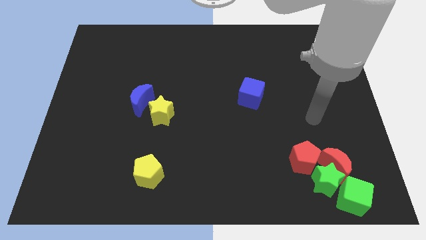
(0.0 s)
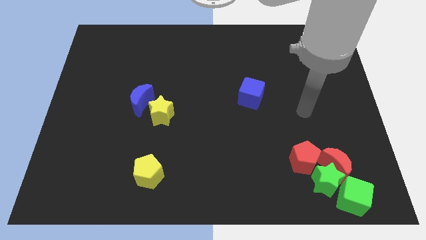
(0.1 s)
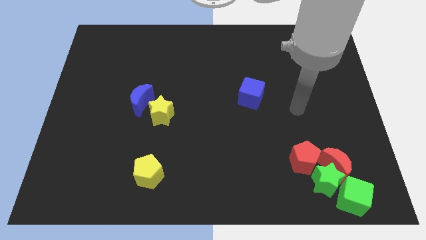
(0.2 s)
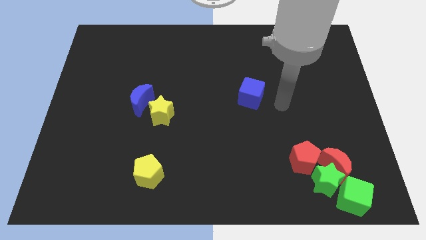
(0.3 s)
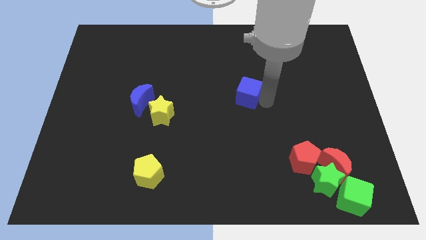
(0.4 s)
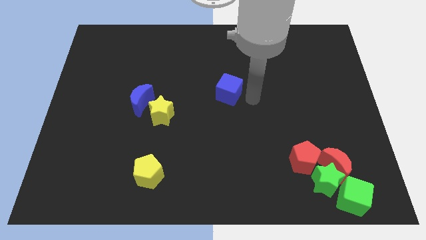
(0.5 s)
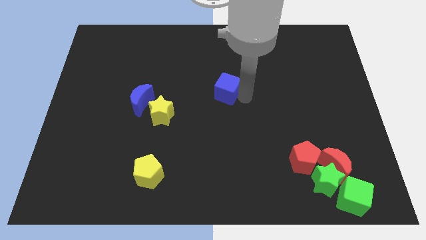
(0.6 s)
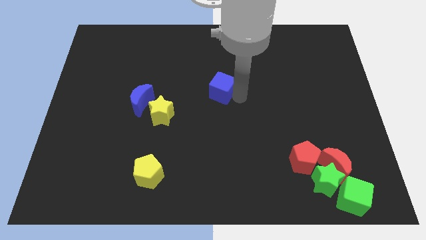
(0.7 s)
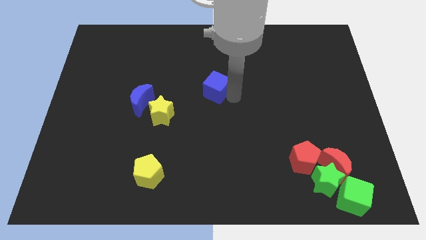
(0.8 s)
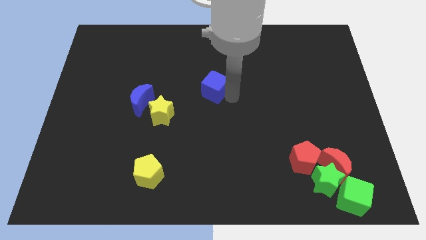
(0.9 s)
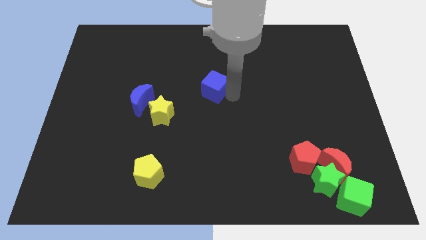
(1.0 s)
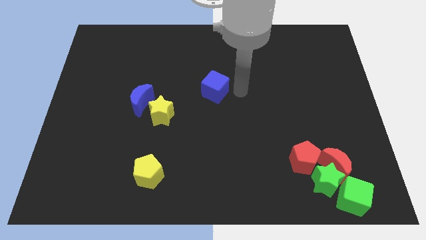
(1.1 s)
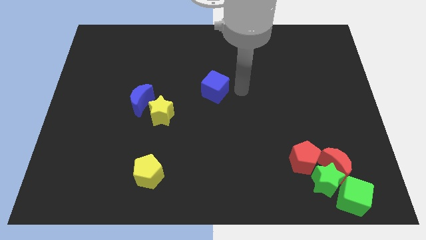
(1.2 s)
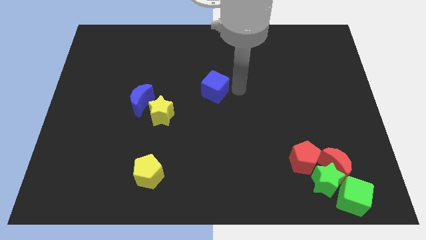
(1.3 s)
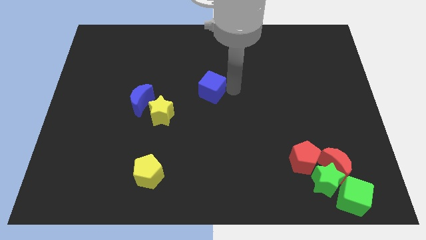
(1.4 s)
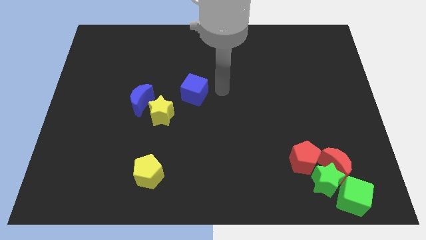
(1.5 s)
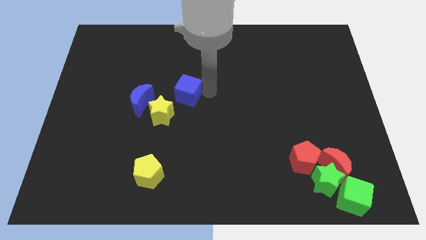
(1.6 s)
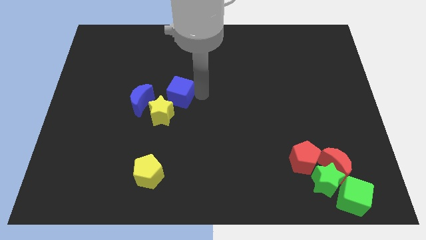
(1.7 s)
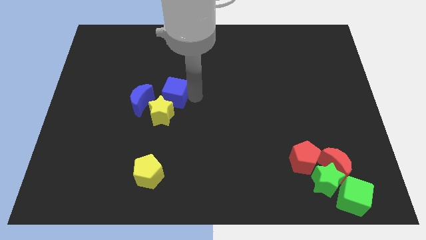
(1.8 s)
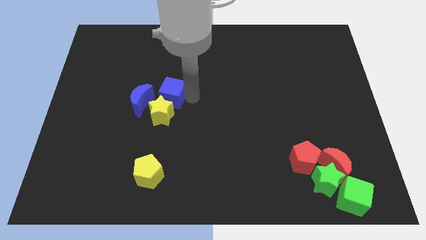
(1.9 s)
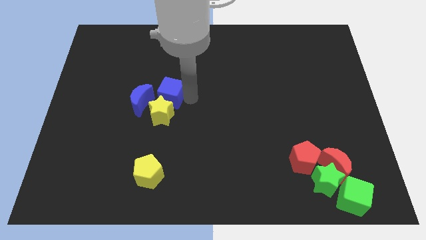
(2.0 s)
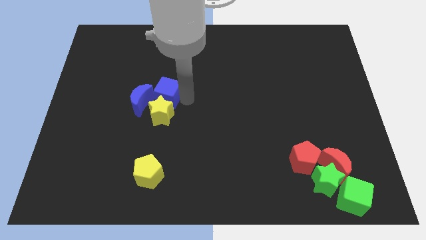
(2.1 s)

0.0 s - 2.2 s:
move the blue cube into the green star and blue moon

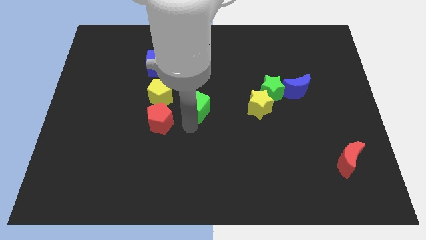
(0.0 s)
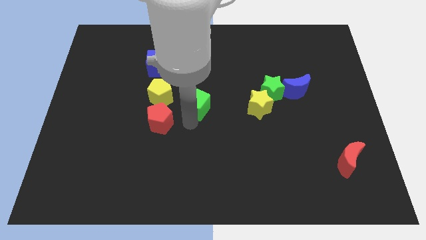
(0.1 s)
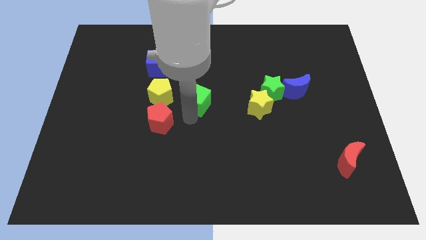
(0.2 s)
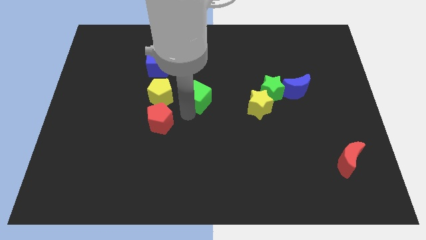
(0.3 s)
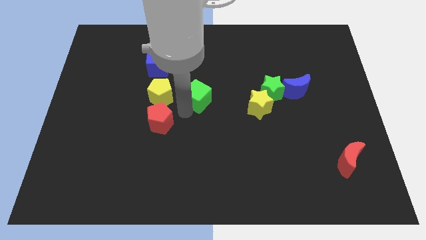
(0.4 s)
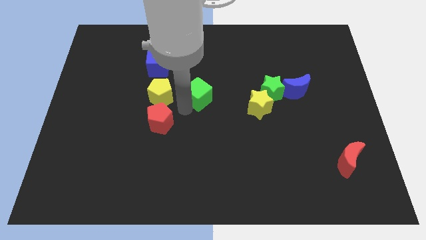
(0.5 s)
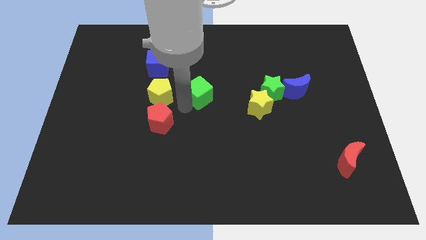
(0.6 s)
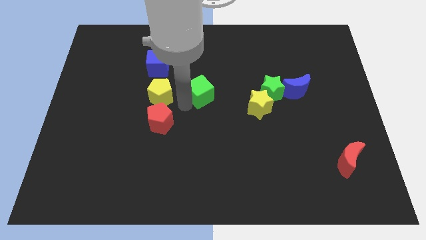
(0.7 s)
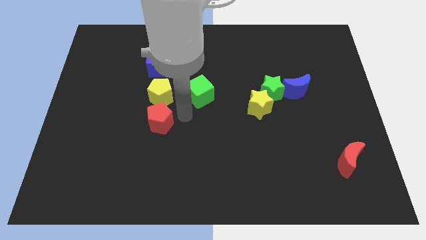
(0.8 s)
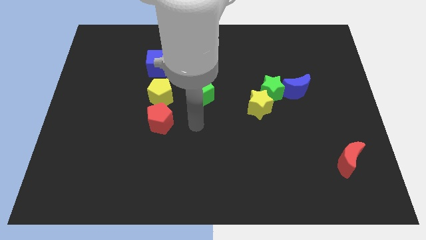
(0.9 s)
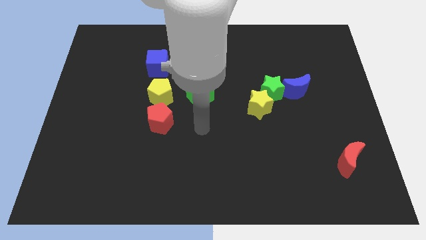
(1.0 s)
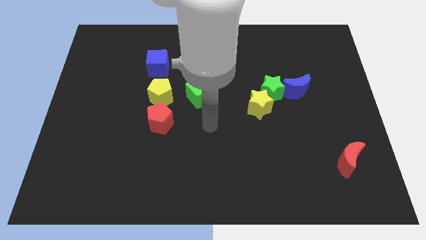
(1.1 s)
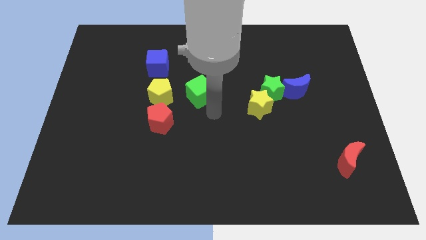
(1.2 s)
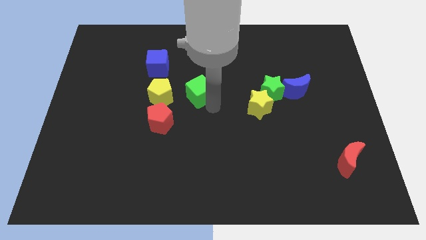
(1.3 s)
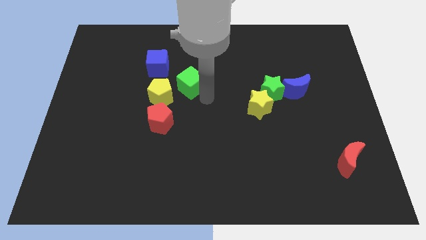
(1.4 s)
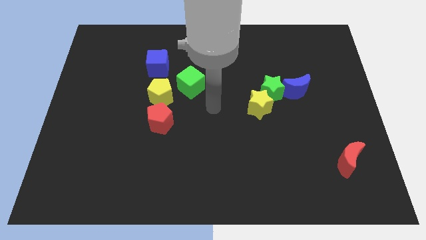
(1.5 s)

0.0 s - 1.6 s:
push the green cube to the right side of the yellow pentagon

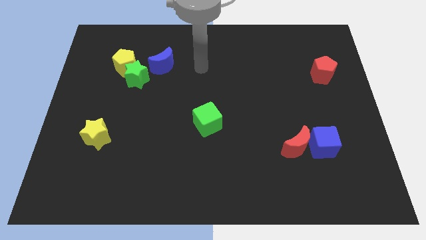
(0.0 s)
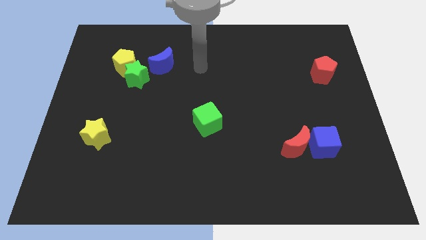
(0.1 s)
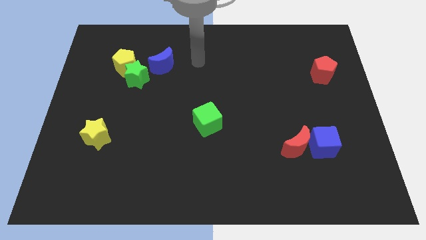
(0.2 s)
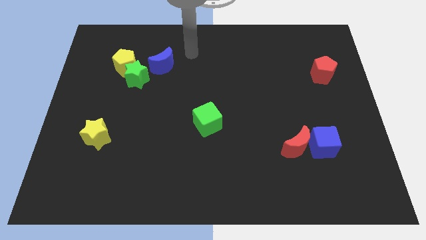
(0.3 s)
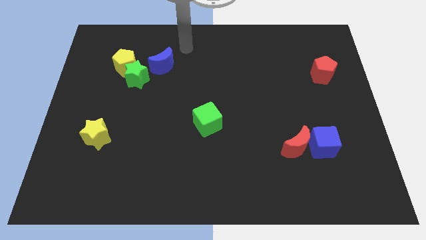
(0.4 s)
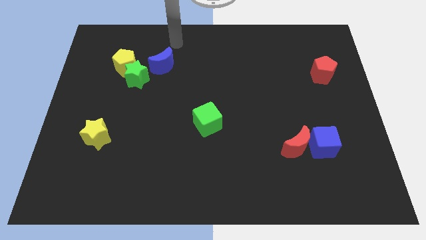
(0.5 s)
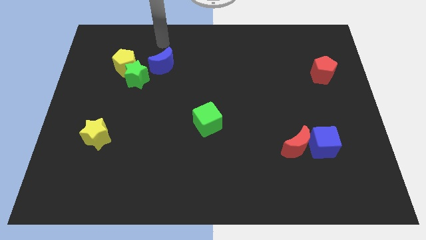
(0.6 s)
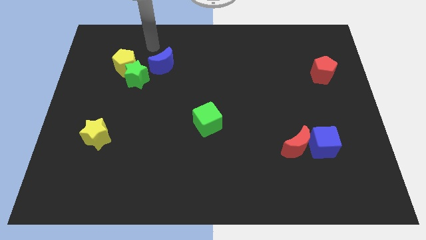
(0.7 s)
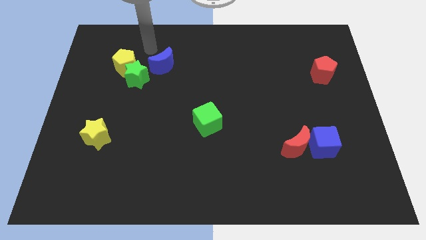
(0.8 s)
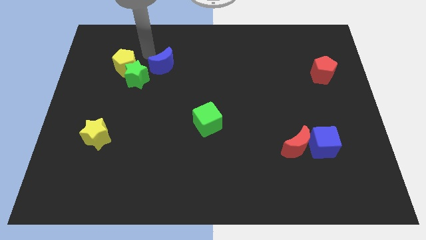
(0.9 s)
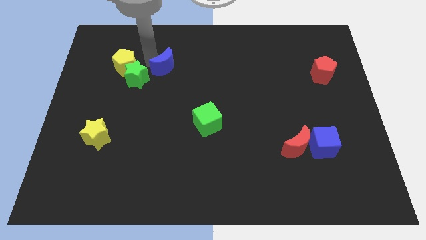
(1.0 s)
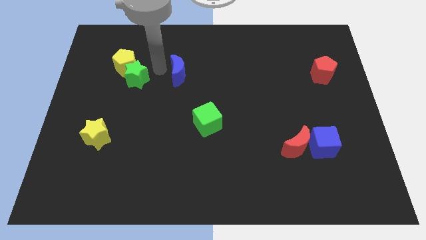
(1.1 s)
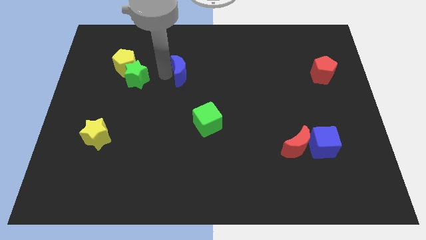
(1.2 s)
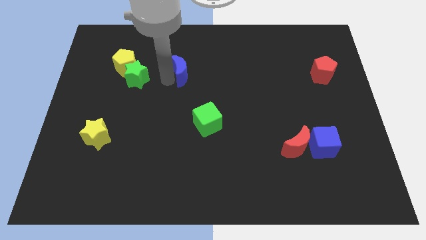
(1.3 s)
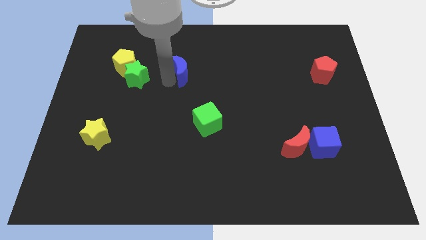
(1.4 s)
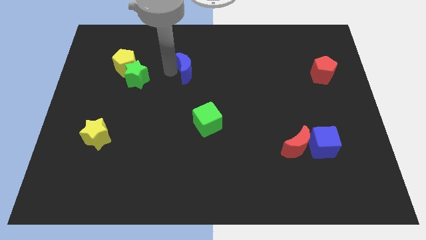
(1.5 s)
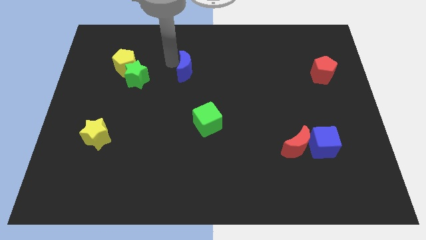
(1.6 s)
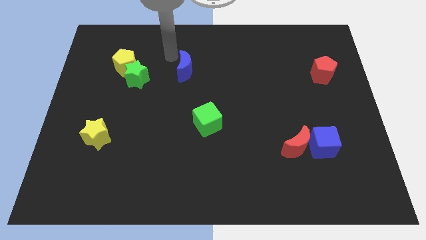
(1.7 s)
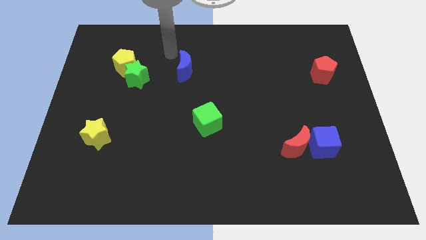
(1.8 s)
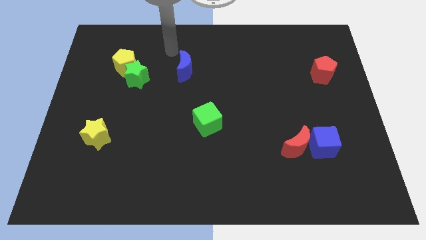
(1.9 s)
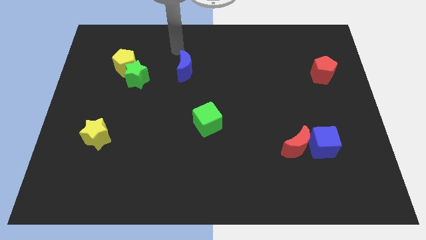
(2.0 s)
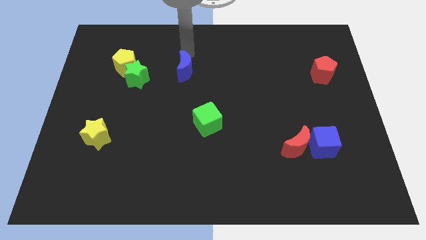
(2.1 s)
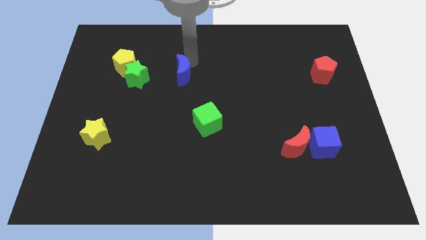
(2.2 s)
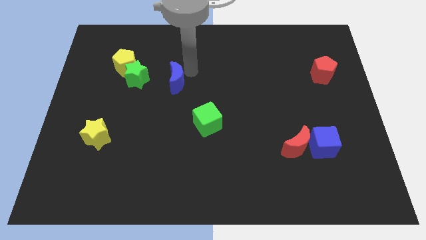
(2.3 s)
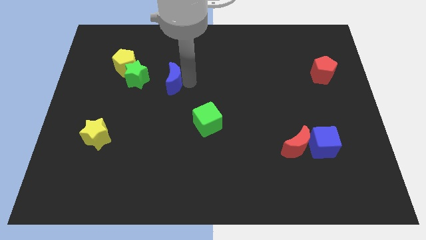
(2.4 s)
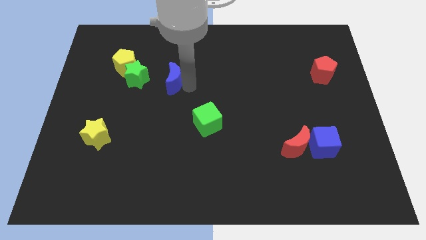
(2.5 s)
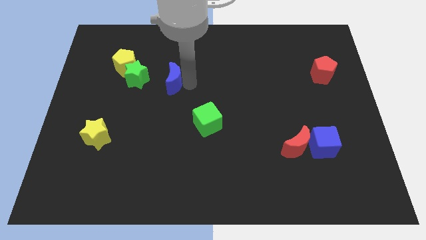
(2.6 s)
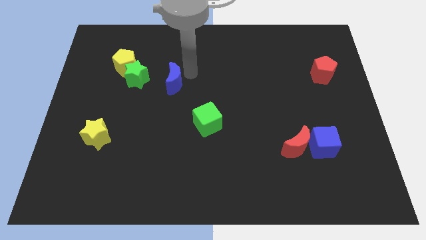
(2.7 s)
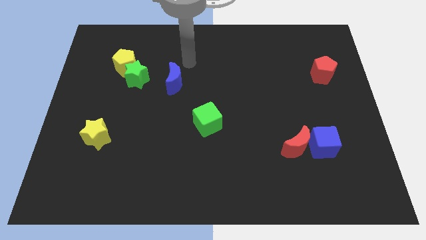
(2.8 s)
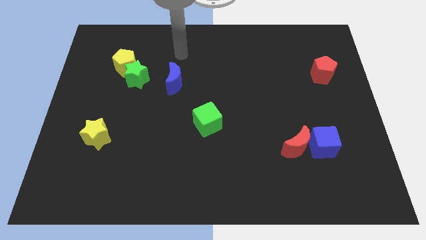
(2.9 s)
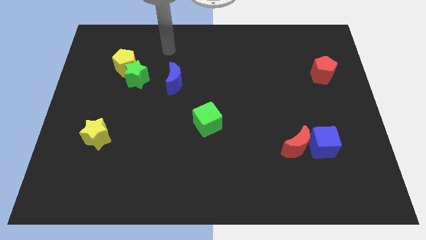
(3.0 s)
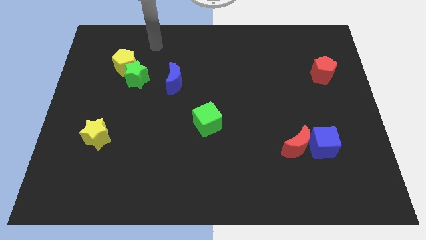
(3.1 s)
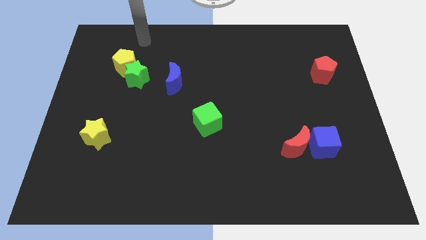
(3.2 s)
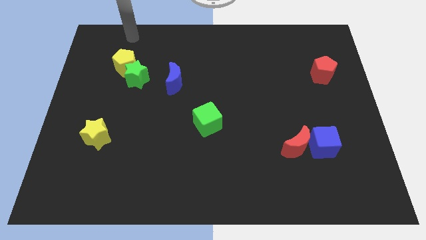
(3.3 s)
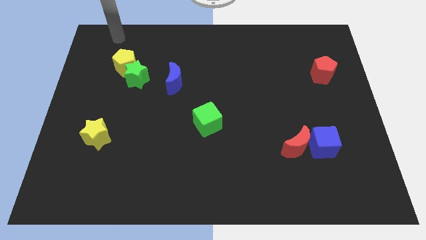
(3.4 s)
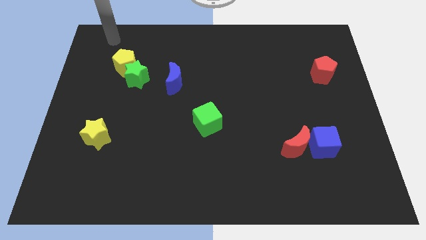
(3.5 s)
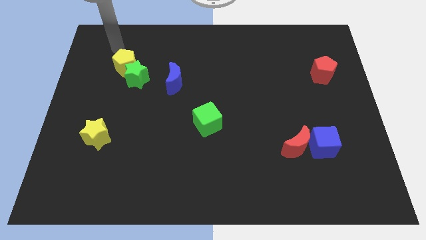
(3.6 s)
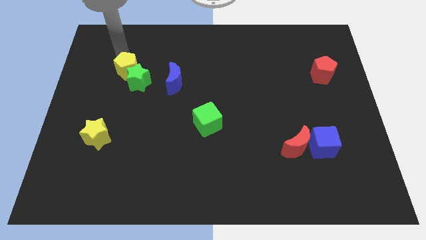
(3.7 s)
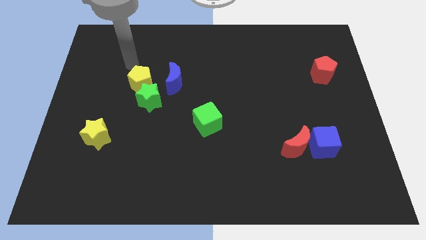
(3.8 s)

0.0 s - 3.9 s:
push the blue moon towards the green cube

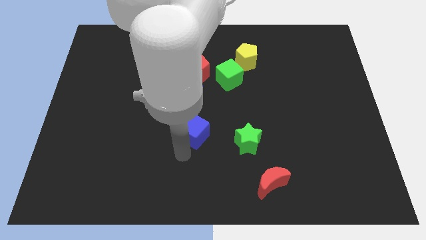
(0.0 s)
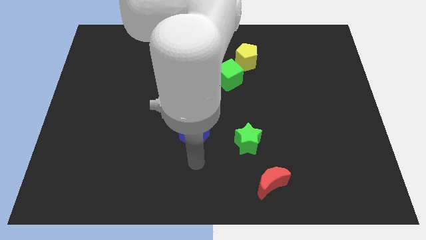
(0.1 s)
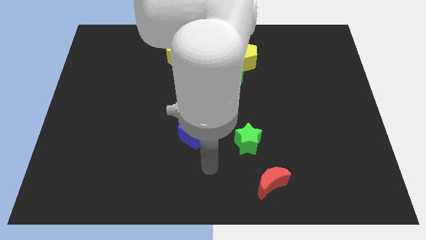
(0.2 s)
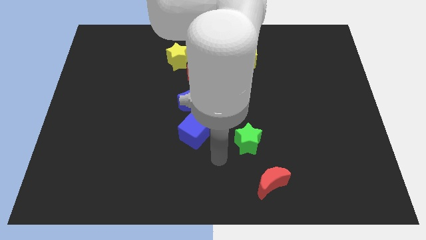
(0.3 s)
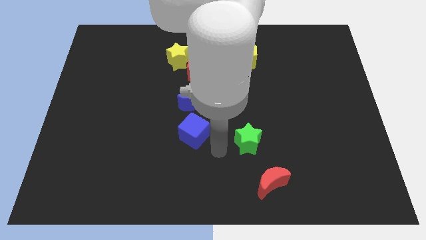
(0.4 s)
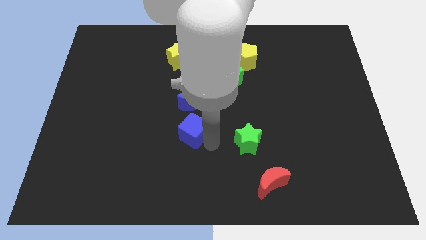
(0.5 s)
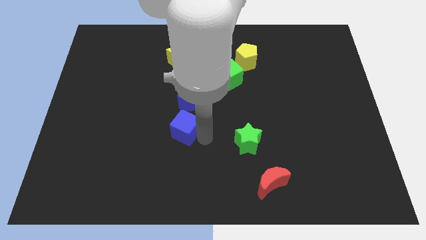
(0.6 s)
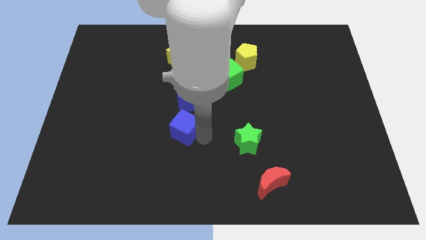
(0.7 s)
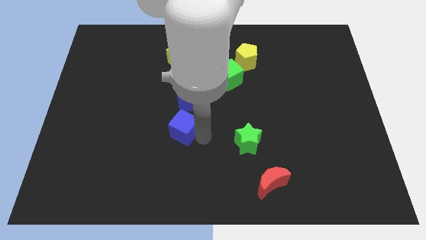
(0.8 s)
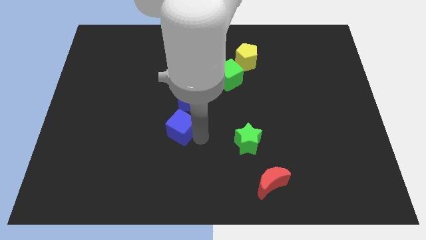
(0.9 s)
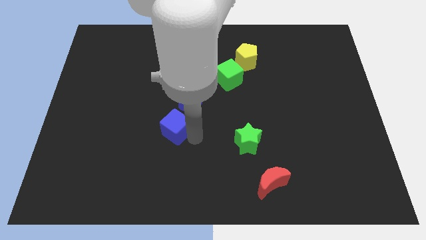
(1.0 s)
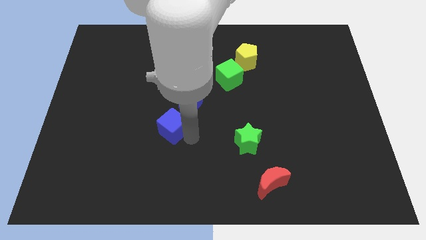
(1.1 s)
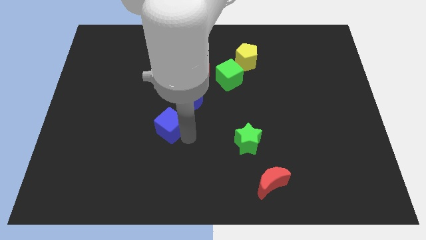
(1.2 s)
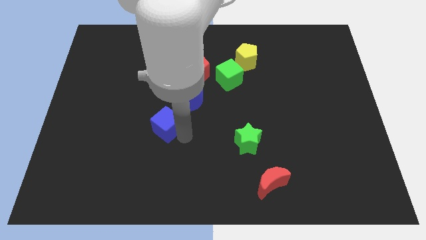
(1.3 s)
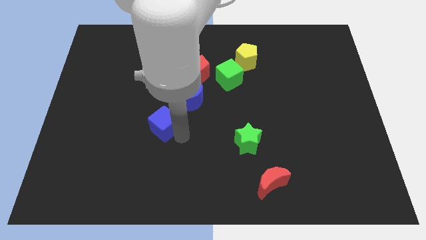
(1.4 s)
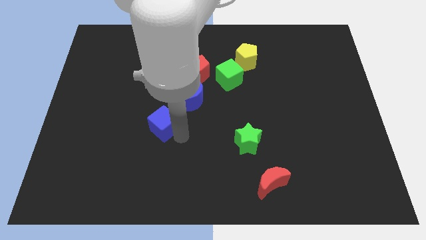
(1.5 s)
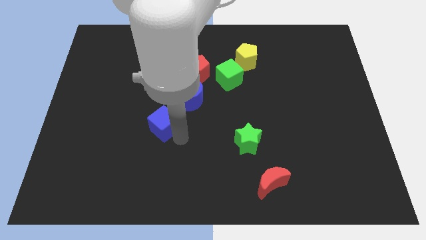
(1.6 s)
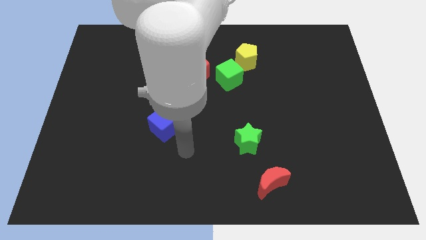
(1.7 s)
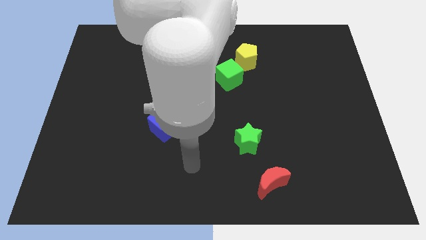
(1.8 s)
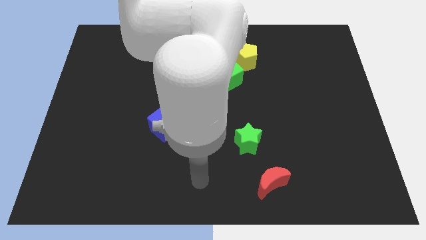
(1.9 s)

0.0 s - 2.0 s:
slightly move the blue cube to the left of the board
